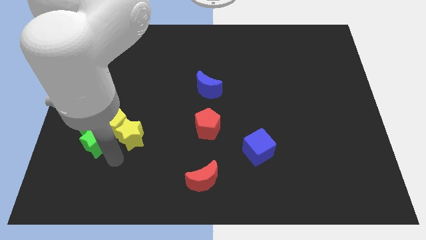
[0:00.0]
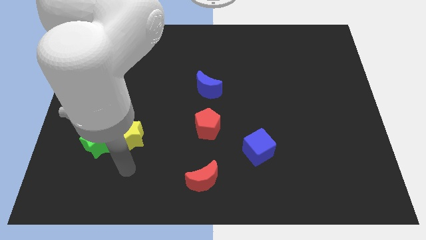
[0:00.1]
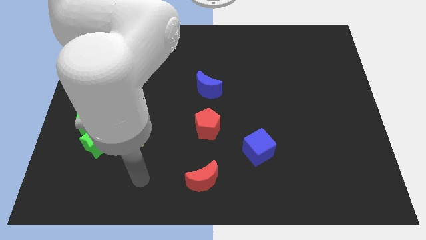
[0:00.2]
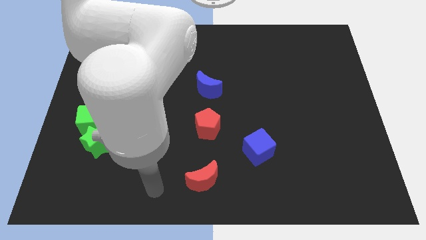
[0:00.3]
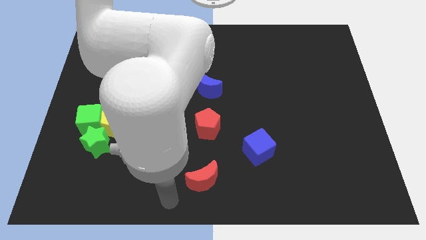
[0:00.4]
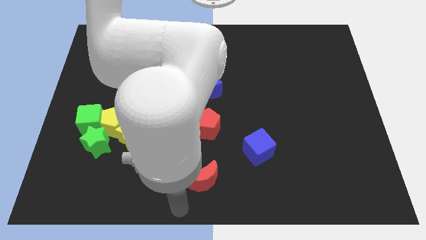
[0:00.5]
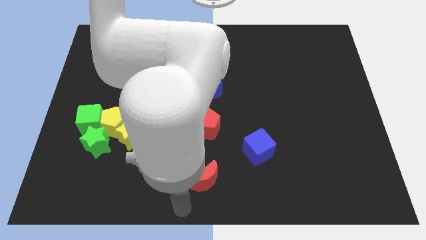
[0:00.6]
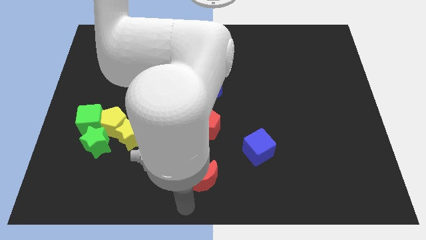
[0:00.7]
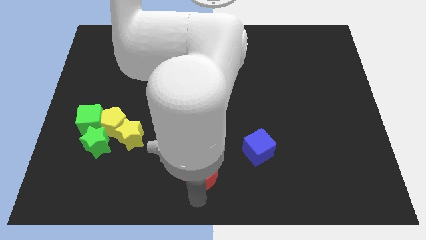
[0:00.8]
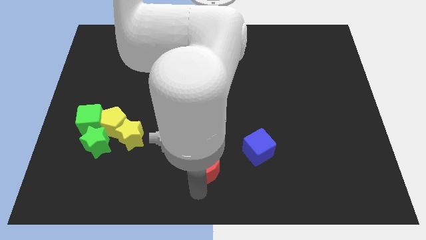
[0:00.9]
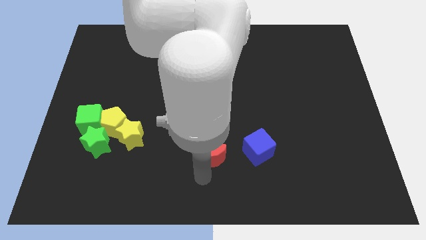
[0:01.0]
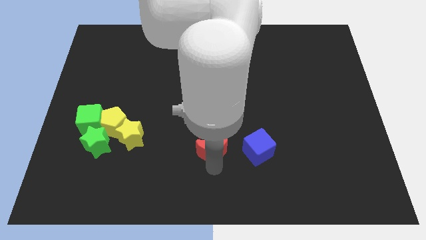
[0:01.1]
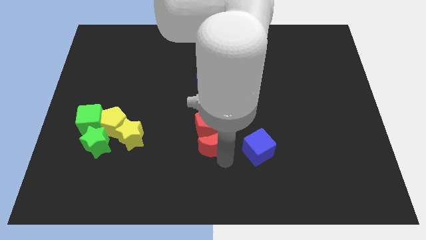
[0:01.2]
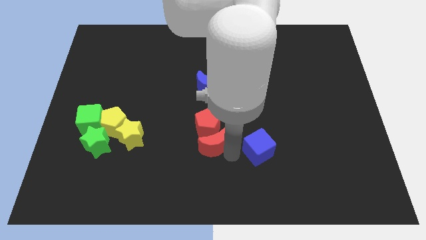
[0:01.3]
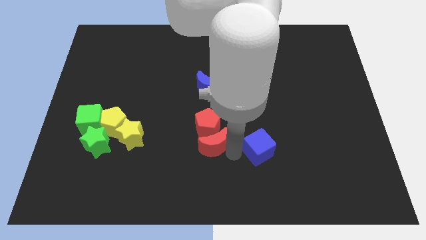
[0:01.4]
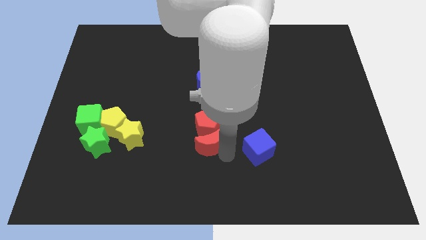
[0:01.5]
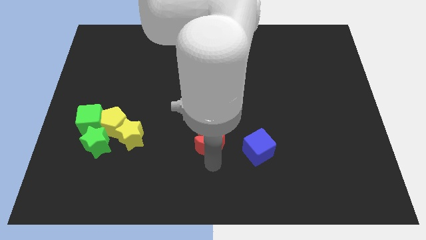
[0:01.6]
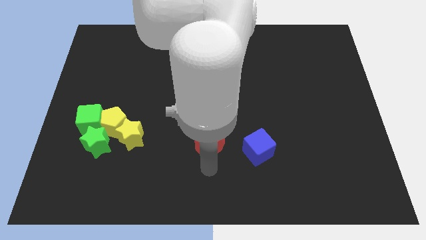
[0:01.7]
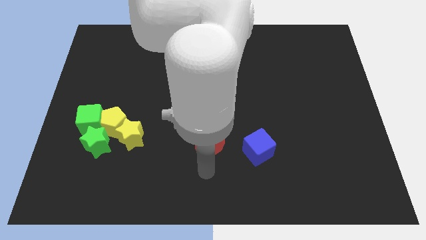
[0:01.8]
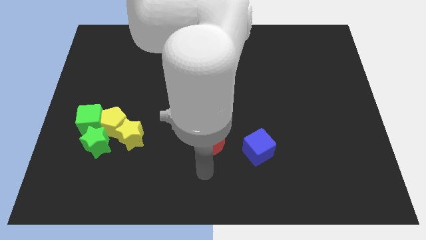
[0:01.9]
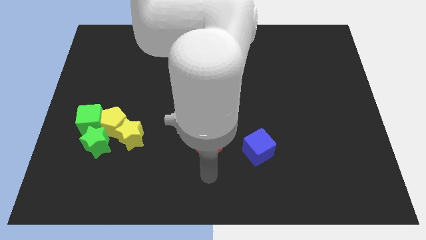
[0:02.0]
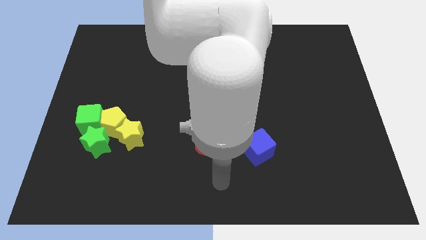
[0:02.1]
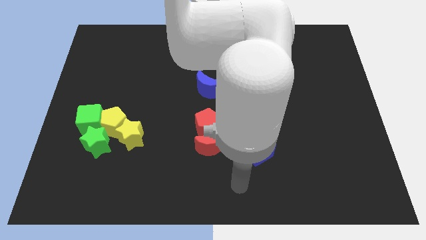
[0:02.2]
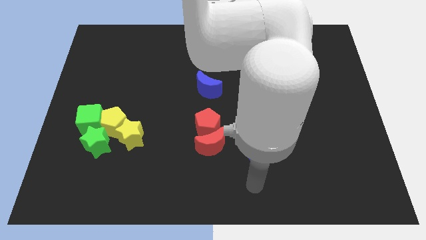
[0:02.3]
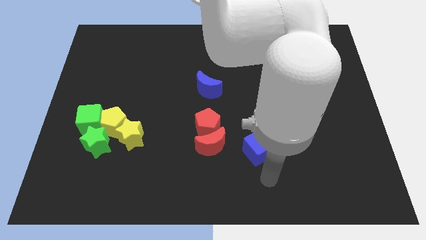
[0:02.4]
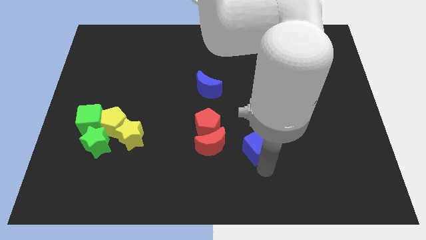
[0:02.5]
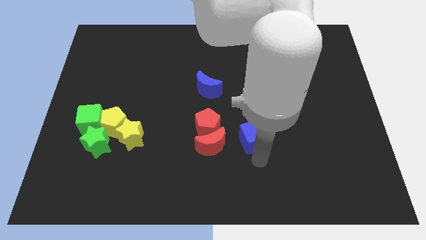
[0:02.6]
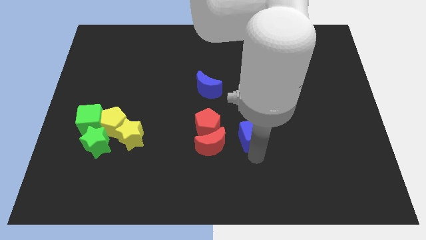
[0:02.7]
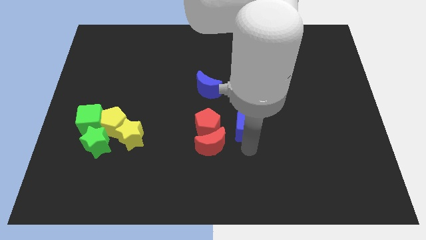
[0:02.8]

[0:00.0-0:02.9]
place the red crescent close to the red pentagon

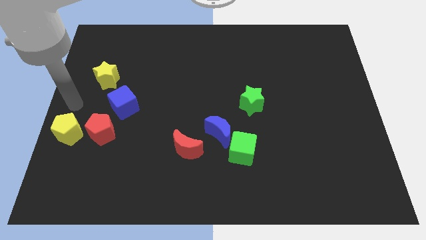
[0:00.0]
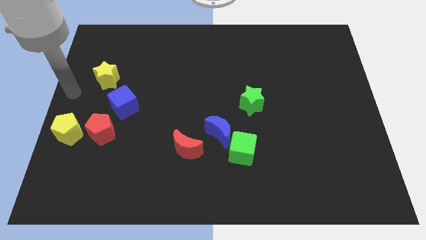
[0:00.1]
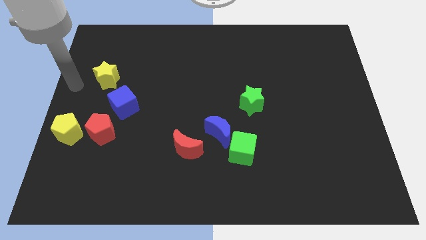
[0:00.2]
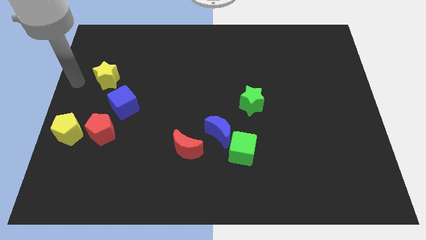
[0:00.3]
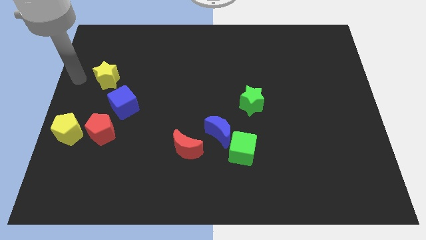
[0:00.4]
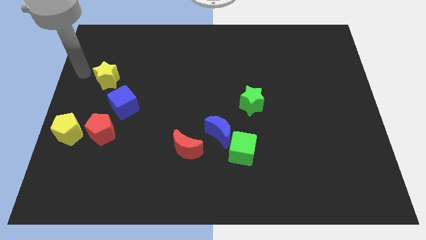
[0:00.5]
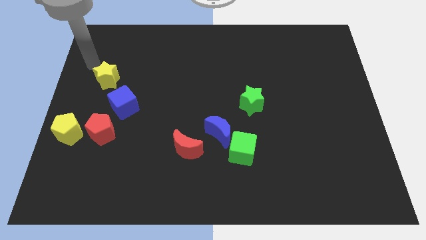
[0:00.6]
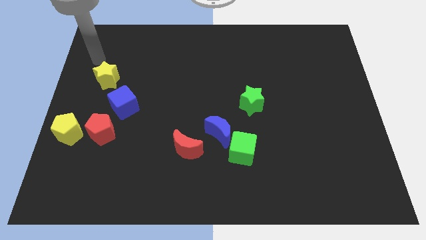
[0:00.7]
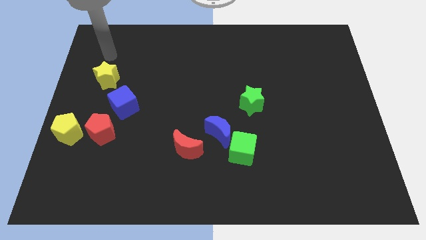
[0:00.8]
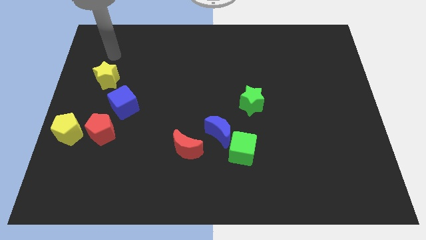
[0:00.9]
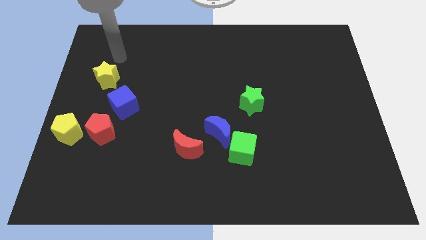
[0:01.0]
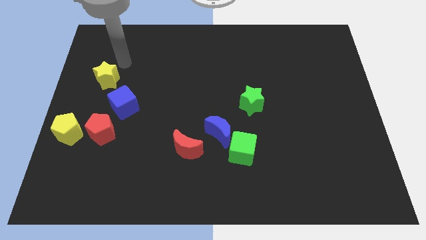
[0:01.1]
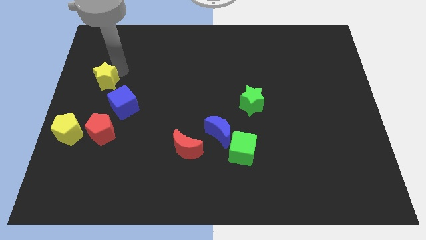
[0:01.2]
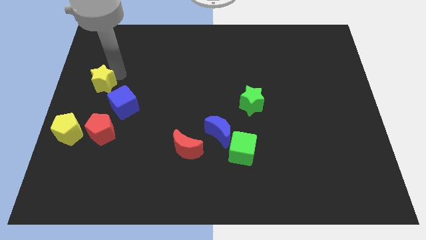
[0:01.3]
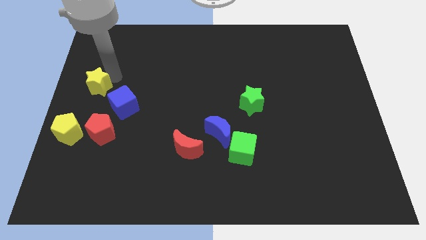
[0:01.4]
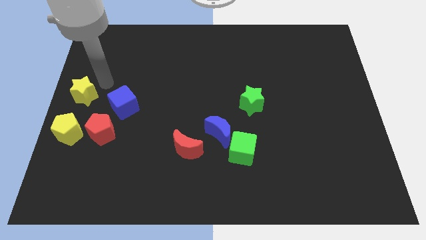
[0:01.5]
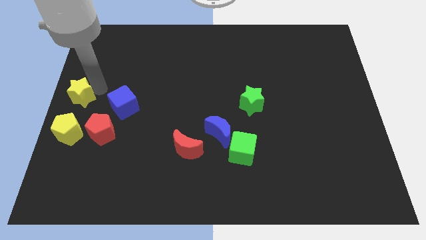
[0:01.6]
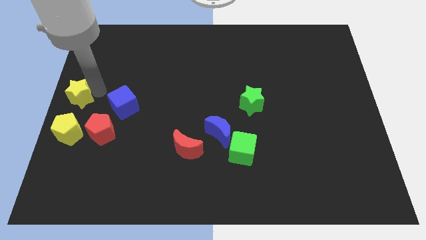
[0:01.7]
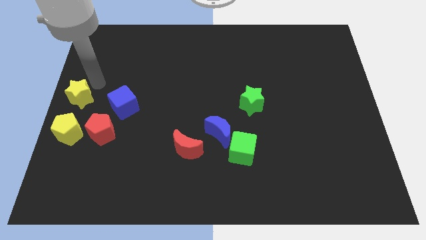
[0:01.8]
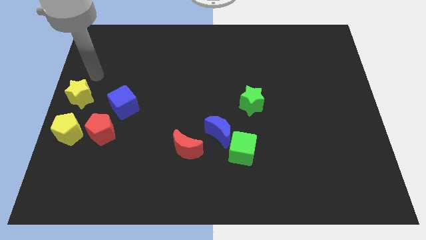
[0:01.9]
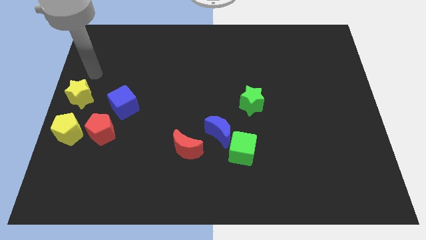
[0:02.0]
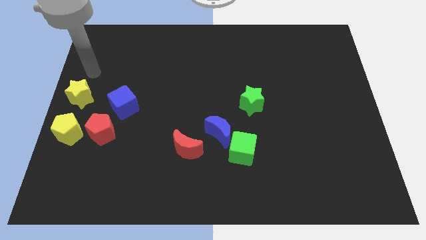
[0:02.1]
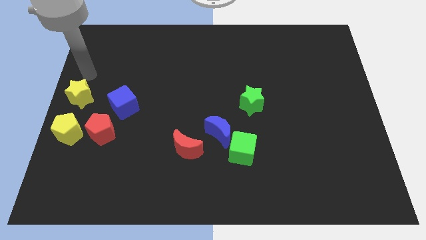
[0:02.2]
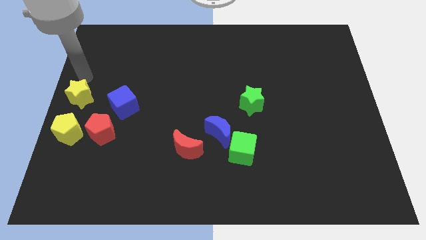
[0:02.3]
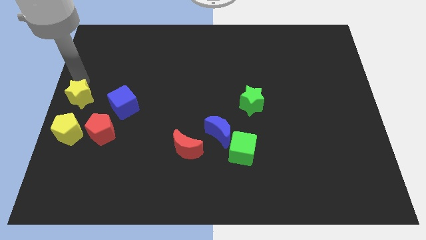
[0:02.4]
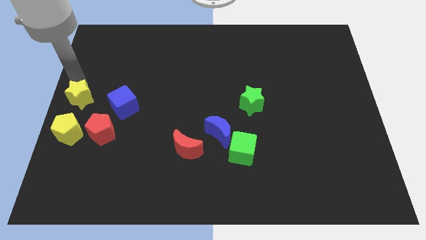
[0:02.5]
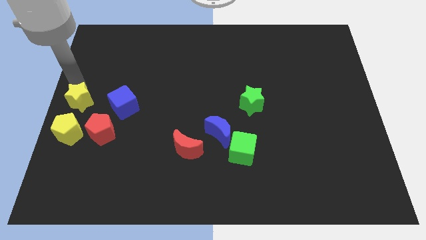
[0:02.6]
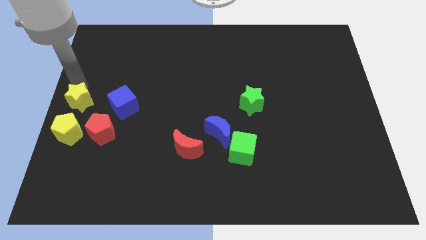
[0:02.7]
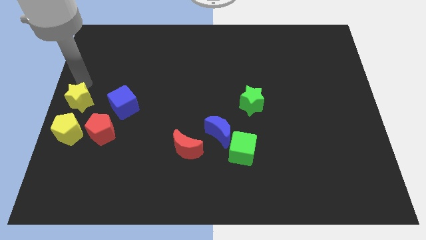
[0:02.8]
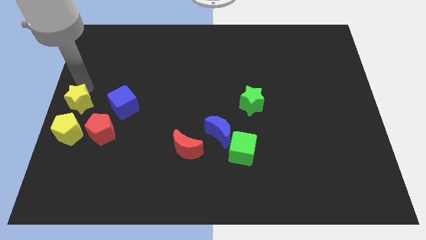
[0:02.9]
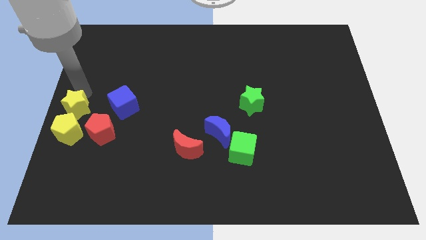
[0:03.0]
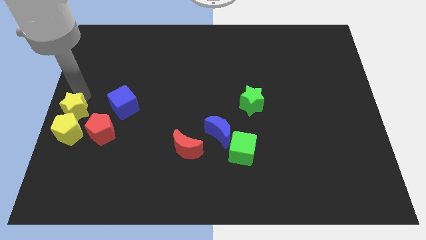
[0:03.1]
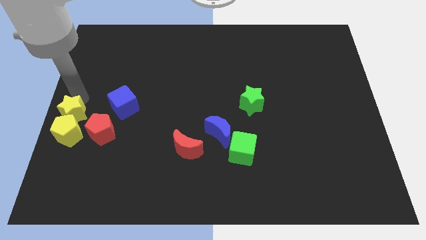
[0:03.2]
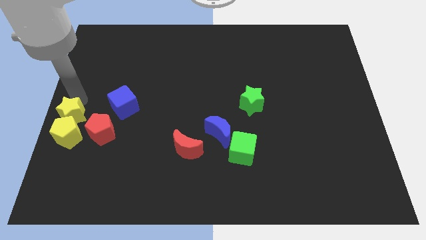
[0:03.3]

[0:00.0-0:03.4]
push the yellow star into the yellow pentagon

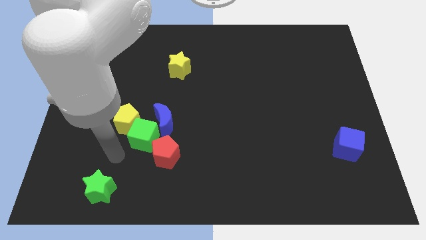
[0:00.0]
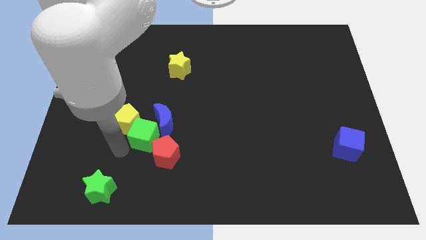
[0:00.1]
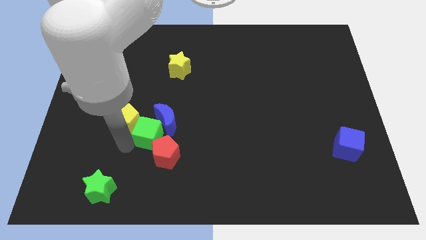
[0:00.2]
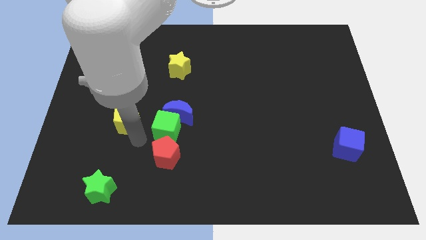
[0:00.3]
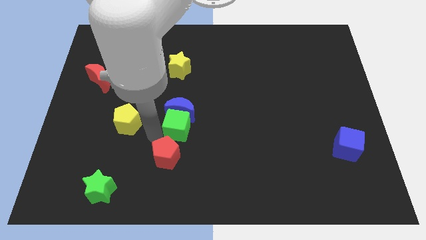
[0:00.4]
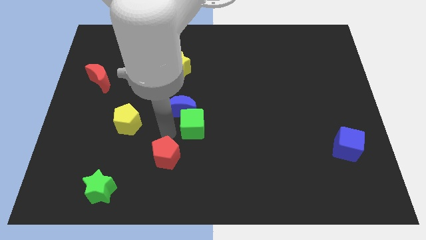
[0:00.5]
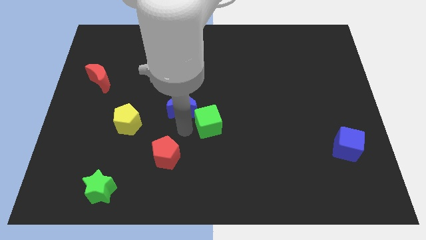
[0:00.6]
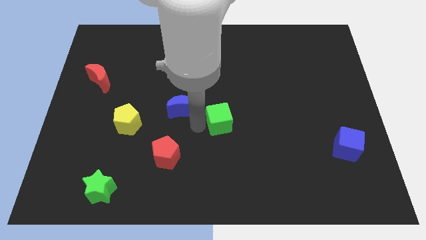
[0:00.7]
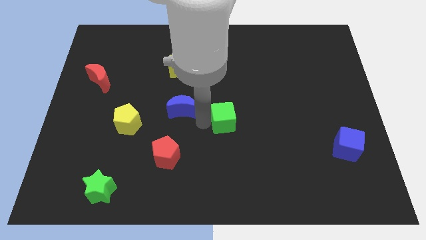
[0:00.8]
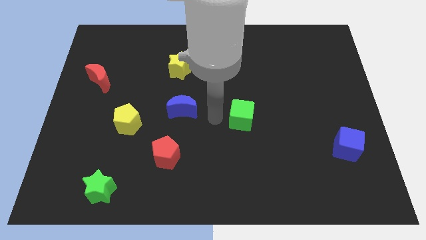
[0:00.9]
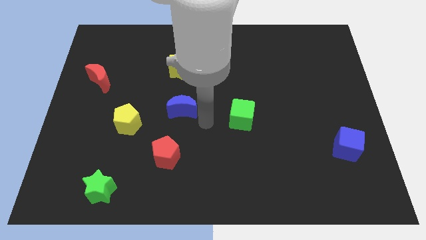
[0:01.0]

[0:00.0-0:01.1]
separate the green cube and the blue moon

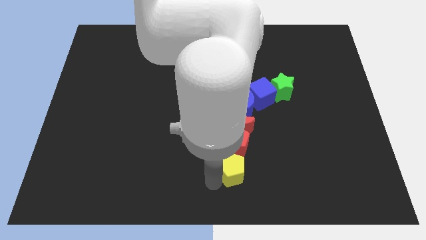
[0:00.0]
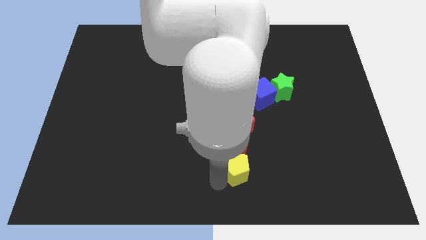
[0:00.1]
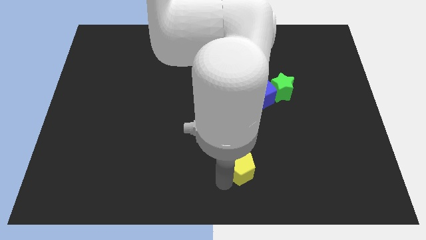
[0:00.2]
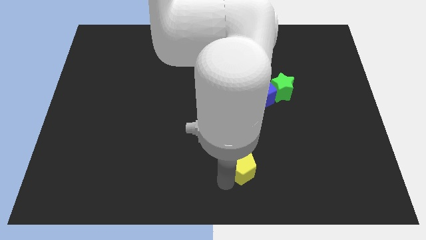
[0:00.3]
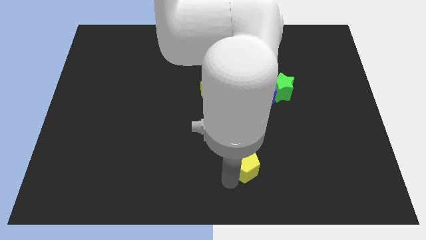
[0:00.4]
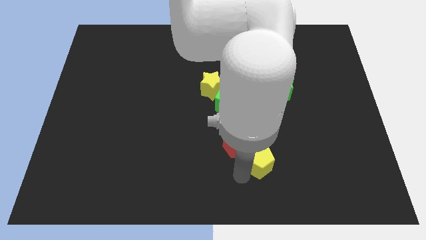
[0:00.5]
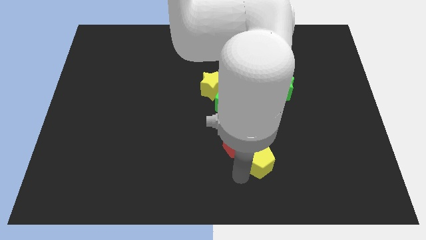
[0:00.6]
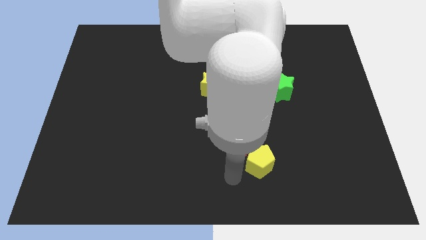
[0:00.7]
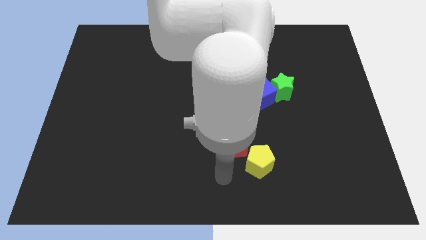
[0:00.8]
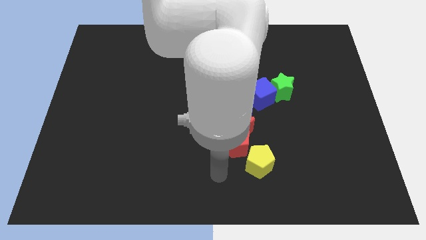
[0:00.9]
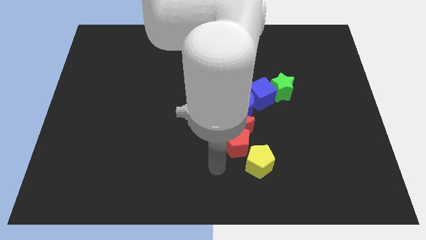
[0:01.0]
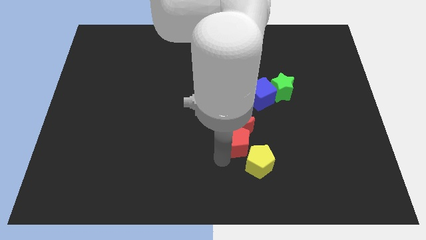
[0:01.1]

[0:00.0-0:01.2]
push the yellow pentagon towards the right

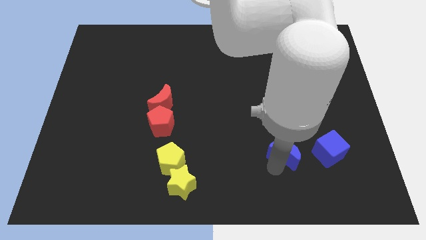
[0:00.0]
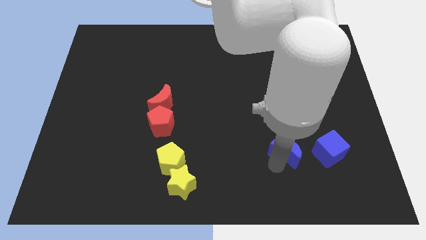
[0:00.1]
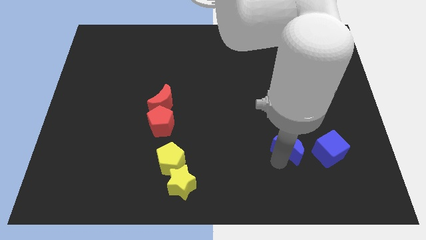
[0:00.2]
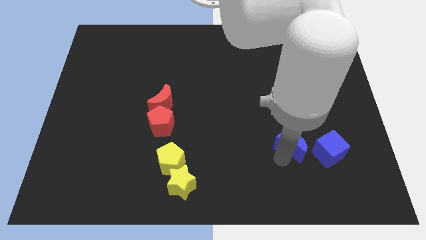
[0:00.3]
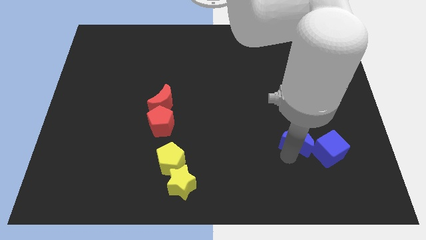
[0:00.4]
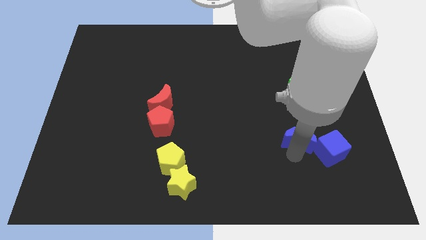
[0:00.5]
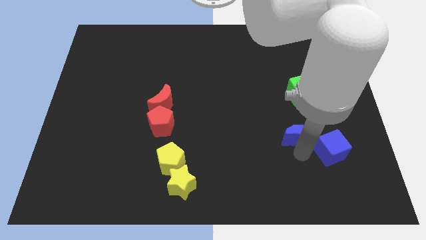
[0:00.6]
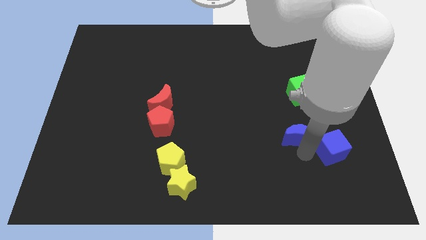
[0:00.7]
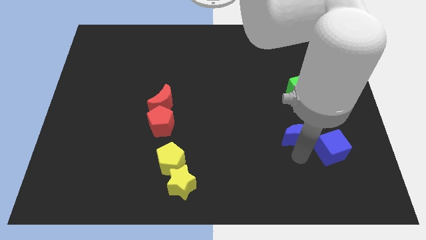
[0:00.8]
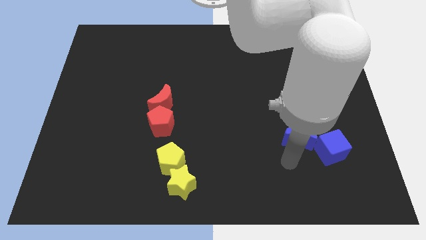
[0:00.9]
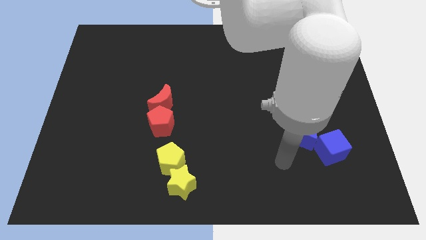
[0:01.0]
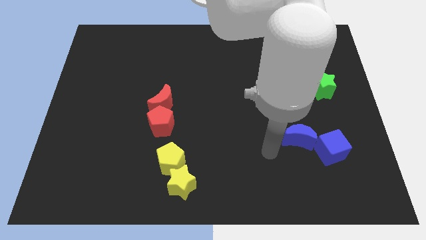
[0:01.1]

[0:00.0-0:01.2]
place the blue crescent towards the top left side of the blue cube
